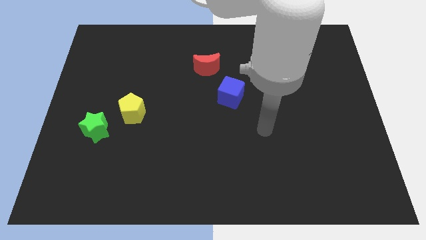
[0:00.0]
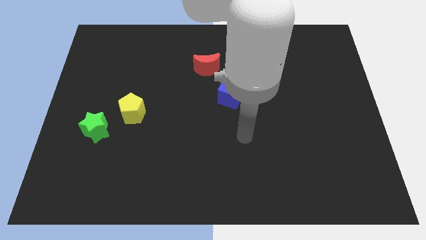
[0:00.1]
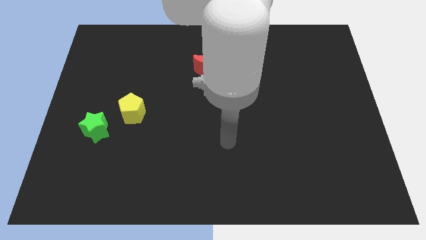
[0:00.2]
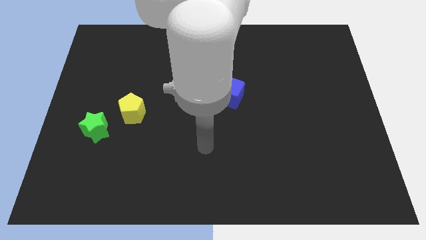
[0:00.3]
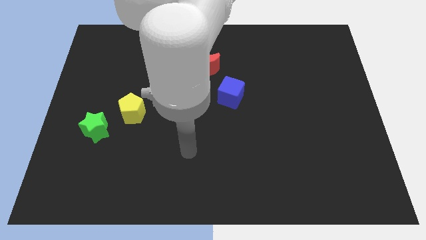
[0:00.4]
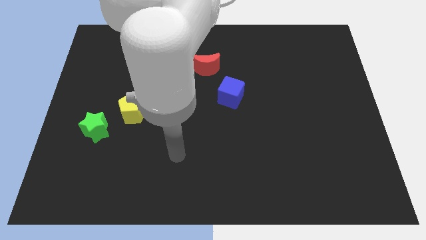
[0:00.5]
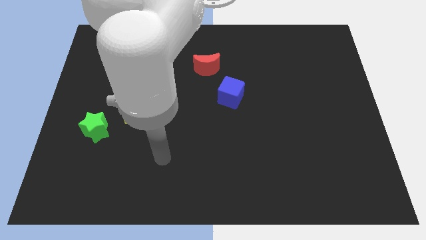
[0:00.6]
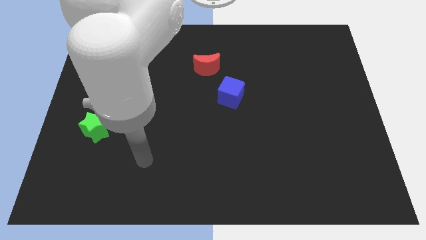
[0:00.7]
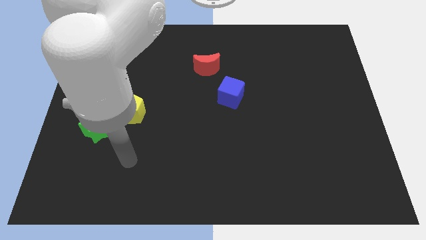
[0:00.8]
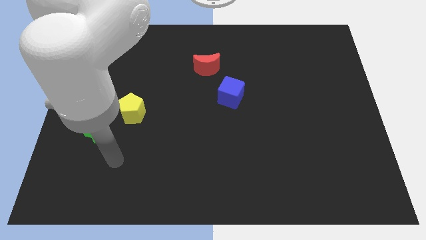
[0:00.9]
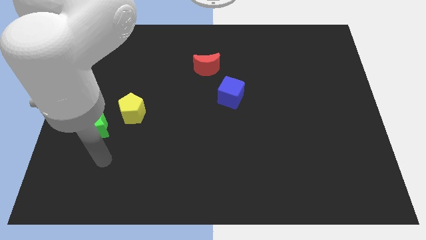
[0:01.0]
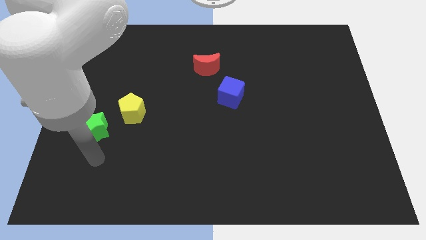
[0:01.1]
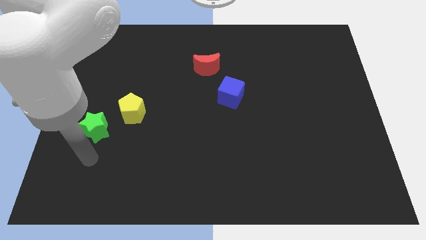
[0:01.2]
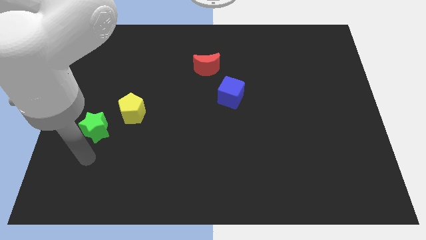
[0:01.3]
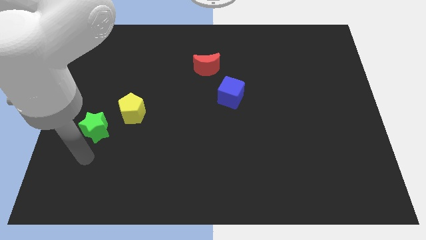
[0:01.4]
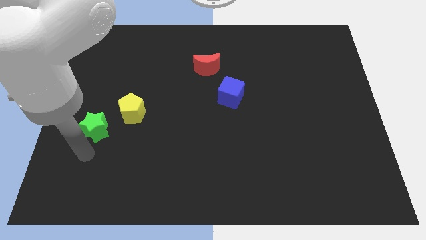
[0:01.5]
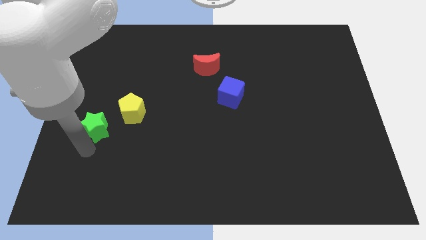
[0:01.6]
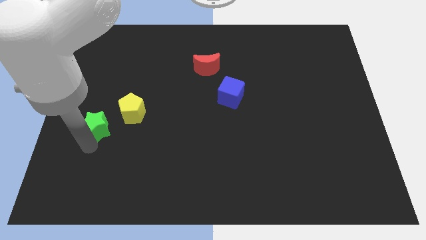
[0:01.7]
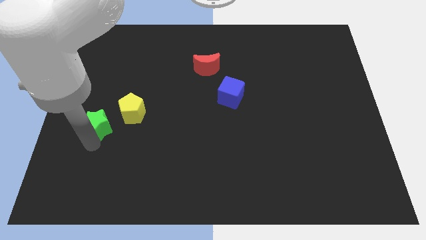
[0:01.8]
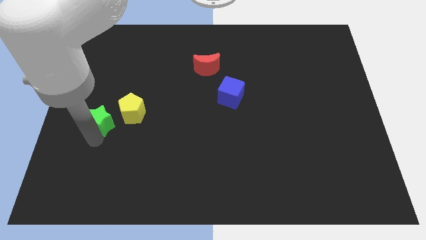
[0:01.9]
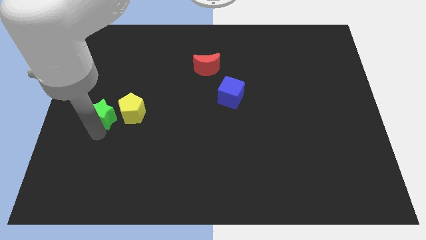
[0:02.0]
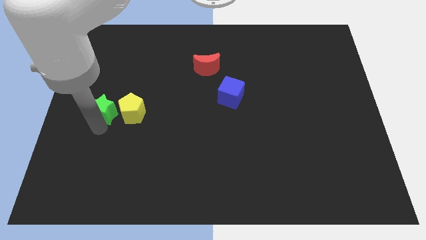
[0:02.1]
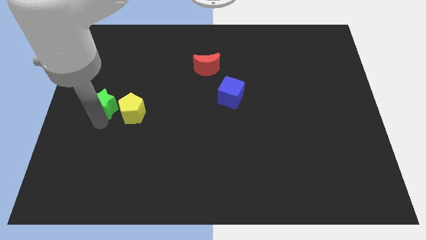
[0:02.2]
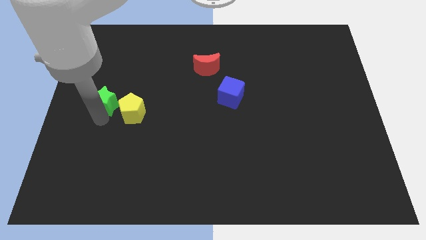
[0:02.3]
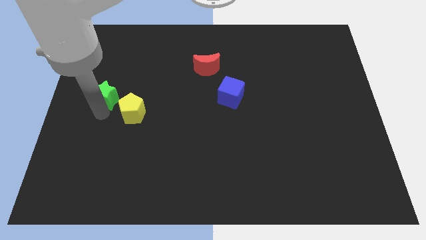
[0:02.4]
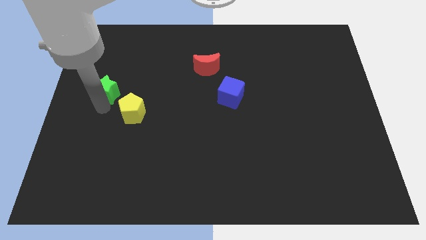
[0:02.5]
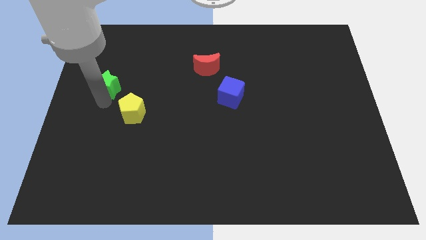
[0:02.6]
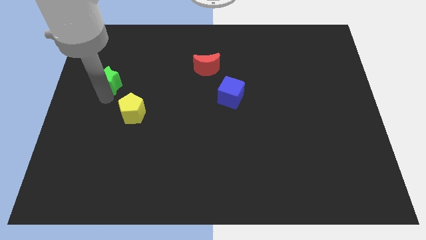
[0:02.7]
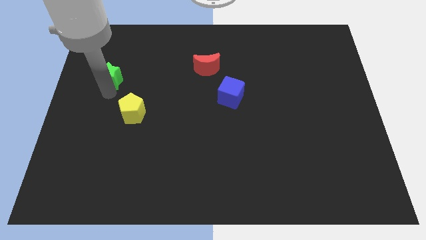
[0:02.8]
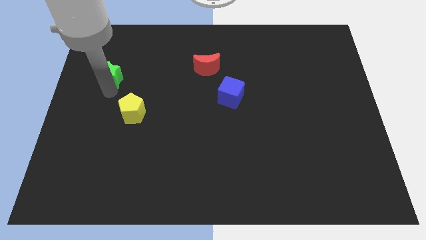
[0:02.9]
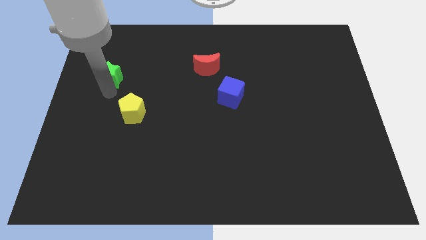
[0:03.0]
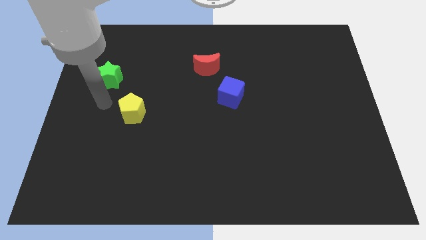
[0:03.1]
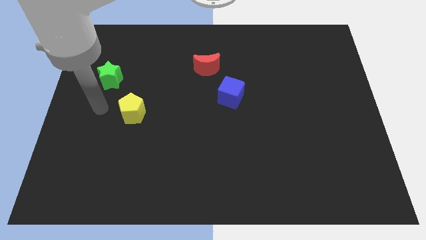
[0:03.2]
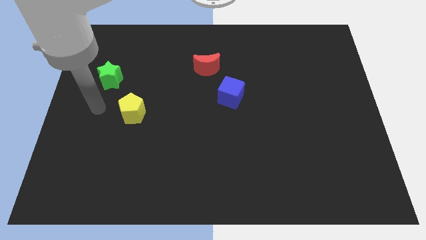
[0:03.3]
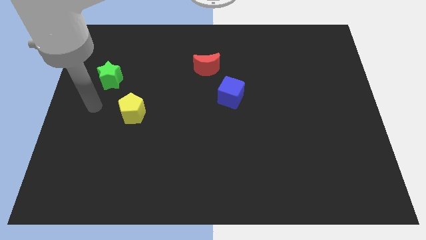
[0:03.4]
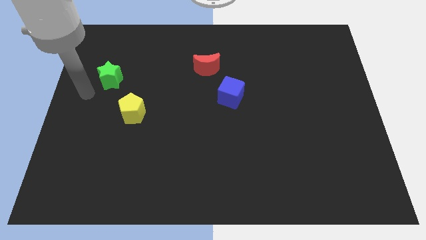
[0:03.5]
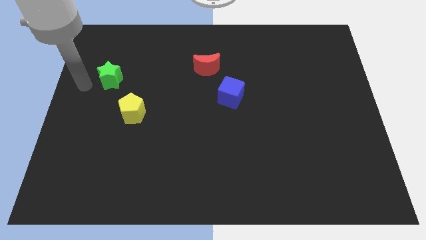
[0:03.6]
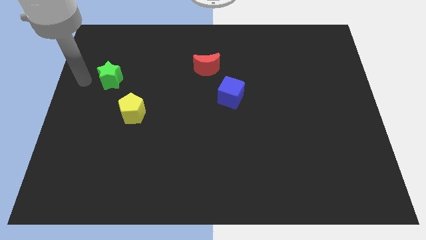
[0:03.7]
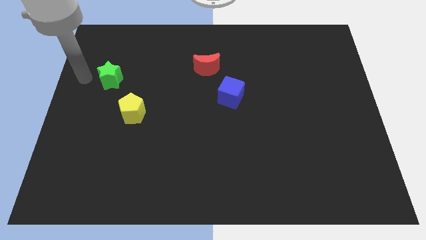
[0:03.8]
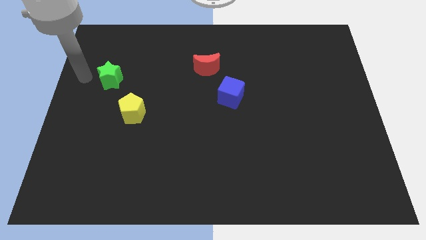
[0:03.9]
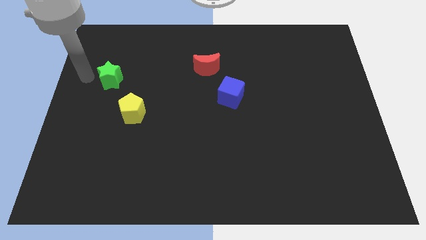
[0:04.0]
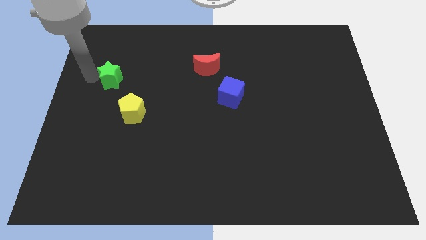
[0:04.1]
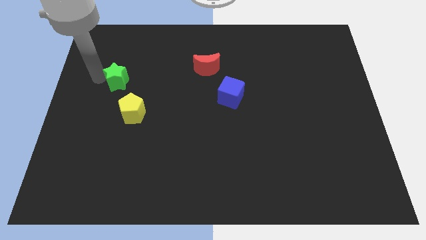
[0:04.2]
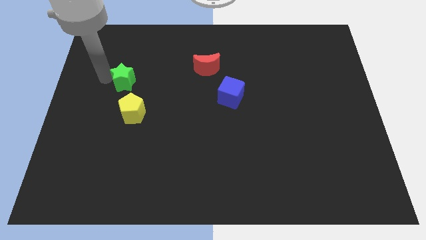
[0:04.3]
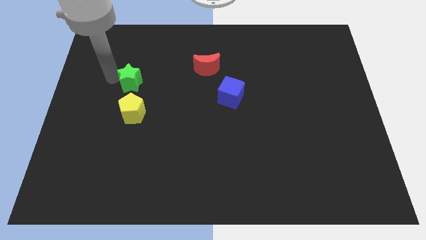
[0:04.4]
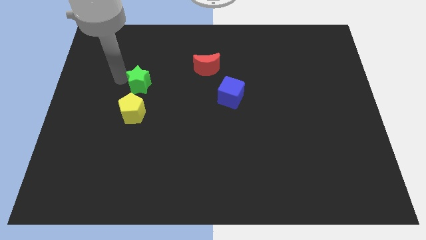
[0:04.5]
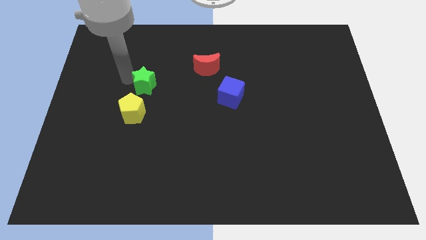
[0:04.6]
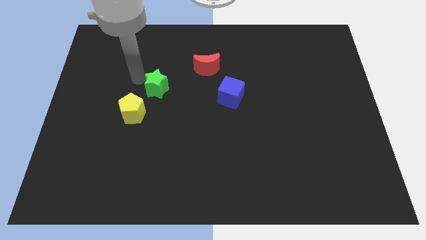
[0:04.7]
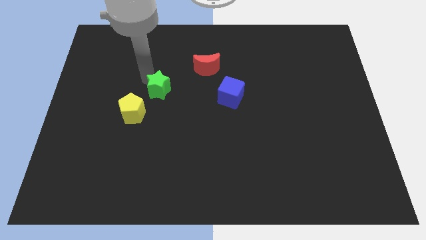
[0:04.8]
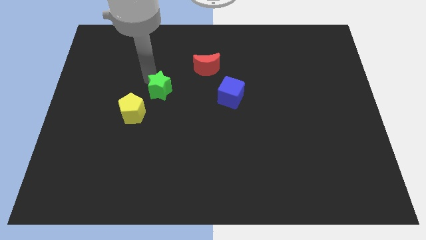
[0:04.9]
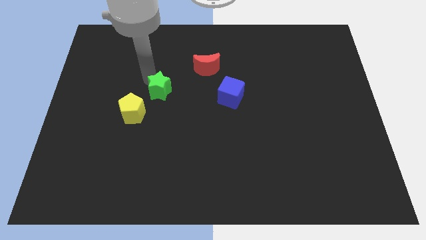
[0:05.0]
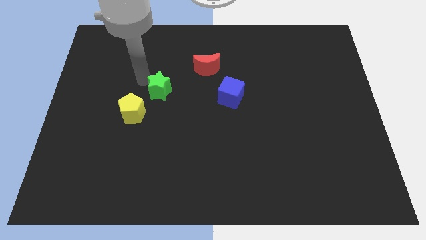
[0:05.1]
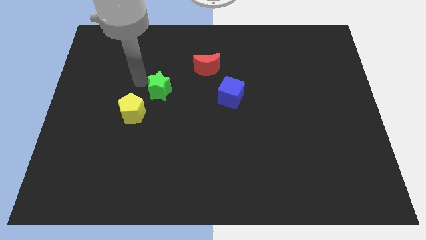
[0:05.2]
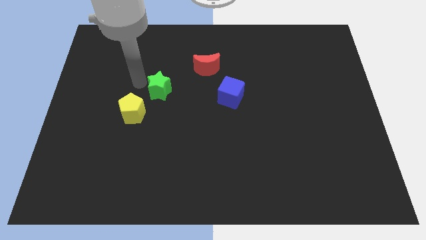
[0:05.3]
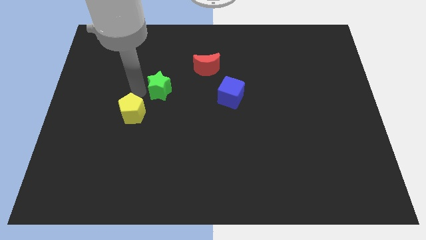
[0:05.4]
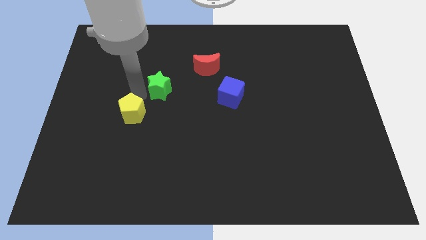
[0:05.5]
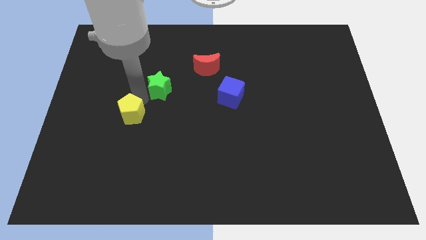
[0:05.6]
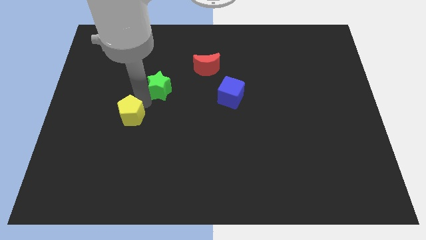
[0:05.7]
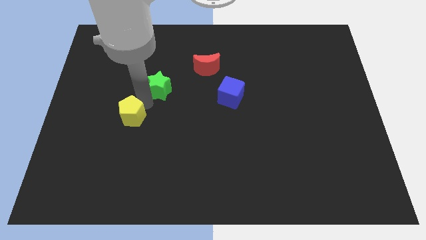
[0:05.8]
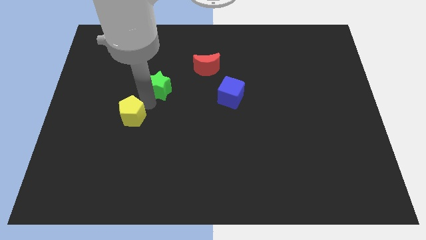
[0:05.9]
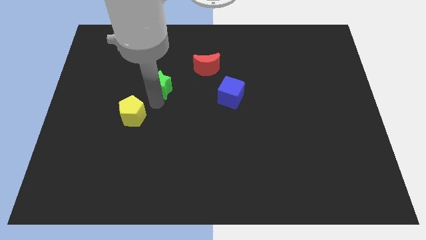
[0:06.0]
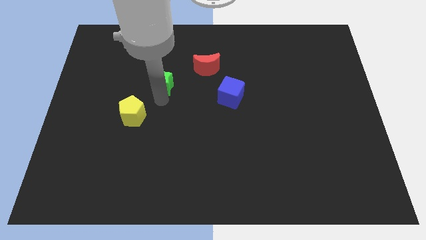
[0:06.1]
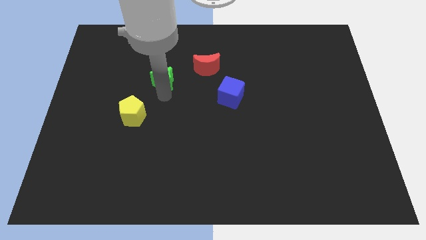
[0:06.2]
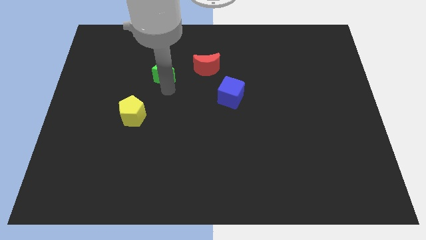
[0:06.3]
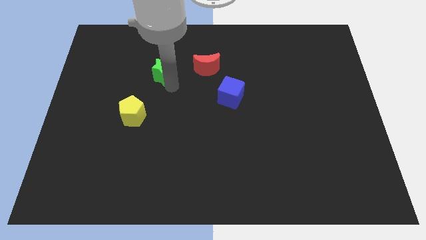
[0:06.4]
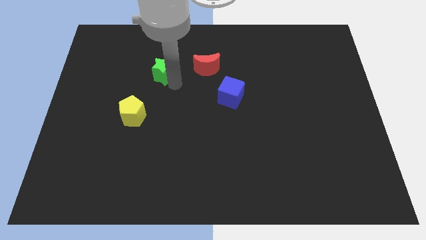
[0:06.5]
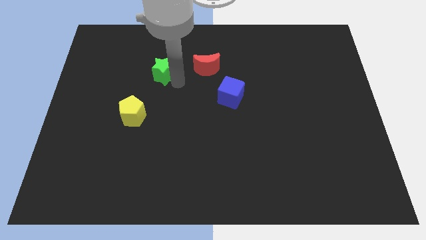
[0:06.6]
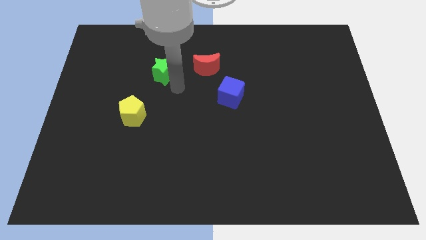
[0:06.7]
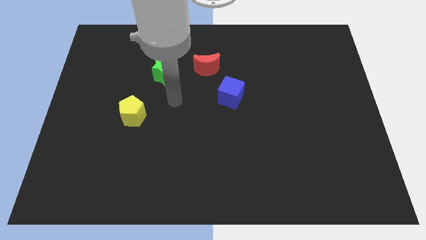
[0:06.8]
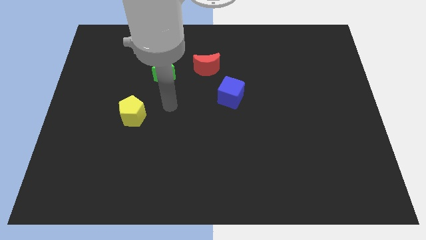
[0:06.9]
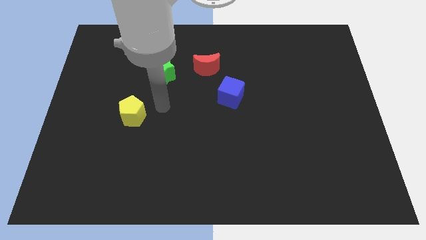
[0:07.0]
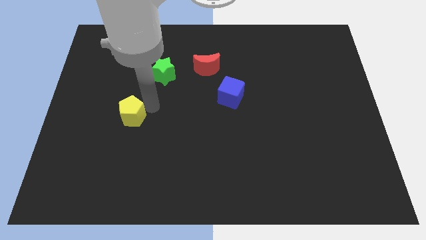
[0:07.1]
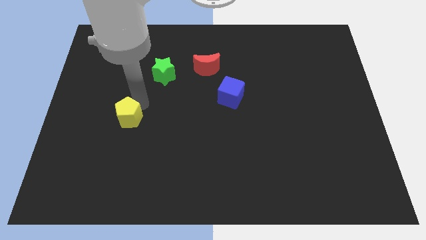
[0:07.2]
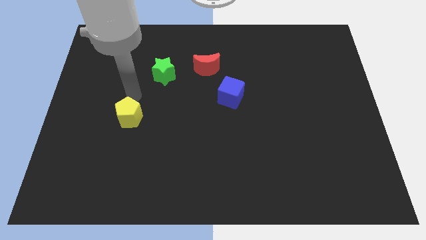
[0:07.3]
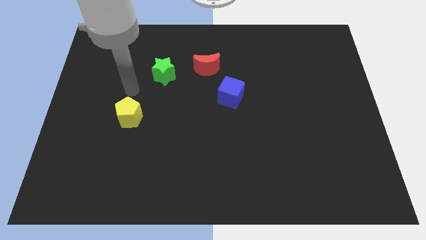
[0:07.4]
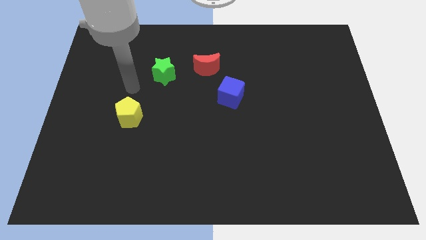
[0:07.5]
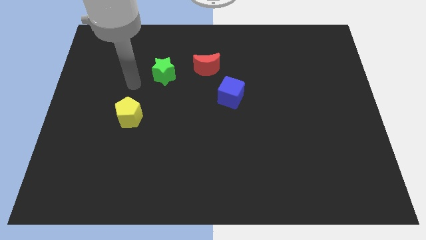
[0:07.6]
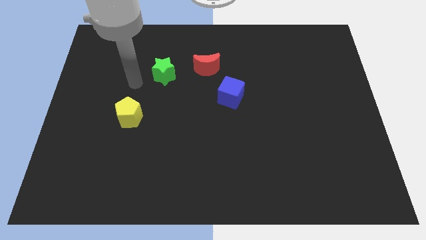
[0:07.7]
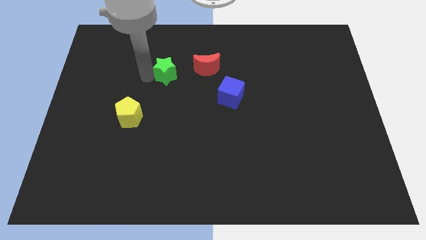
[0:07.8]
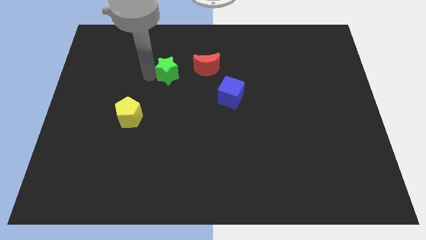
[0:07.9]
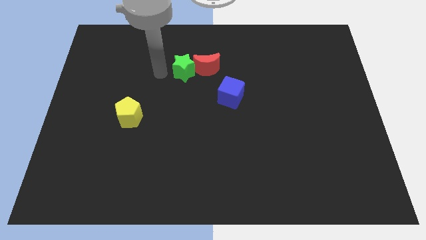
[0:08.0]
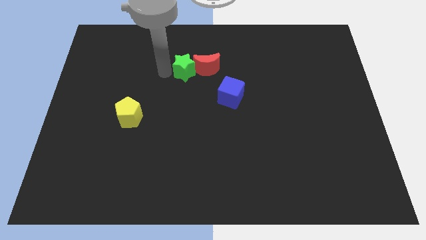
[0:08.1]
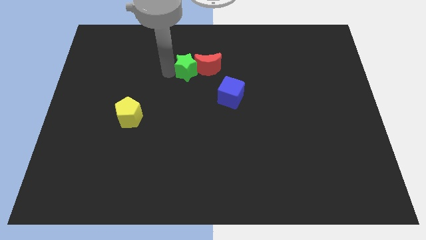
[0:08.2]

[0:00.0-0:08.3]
put the star close to the red block
